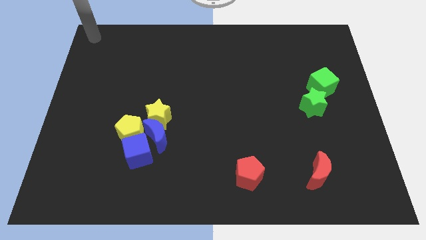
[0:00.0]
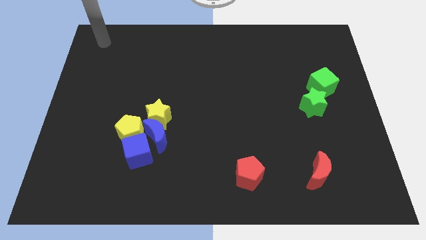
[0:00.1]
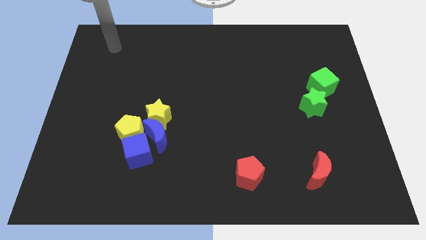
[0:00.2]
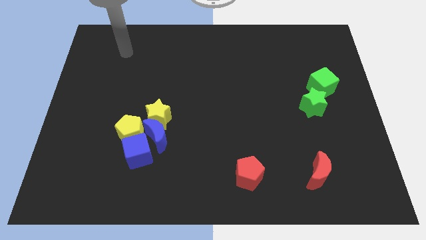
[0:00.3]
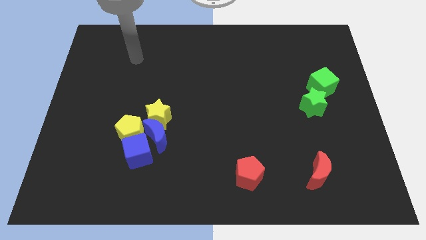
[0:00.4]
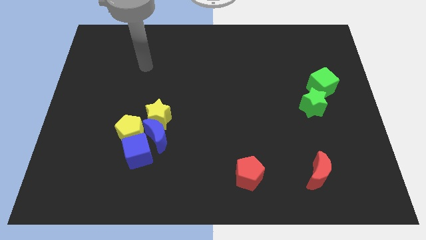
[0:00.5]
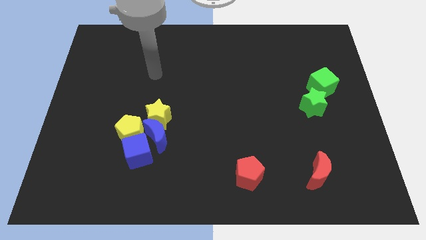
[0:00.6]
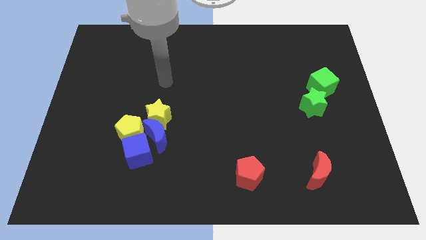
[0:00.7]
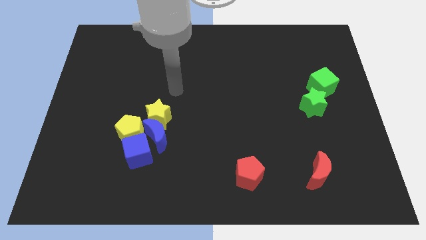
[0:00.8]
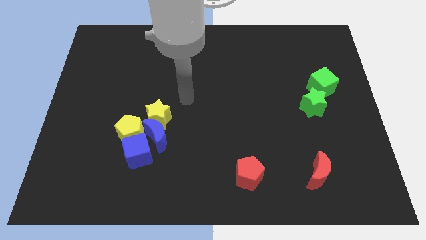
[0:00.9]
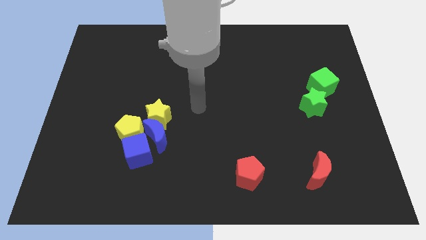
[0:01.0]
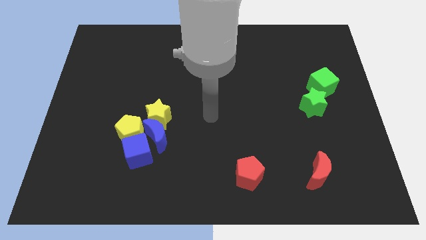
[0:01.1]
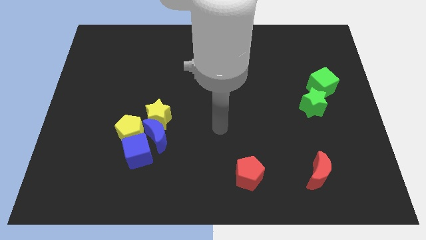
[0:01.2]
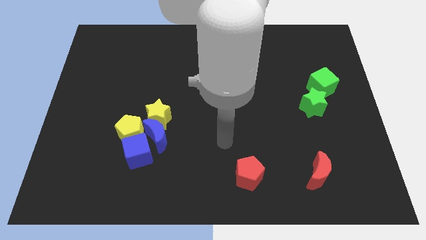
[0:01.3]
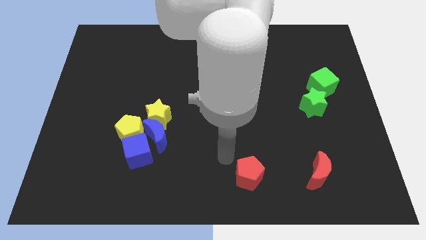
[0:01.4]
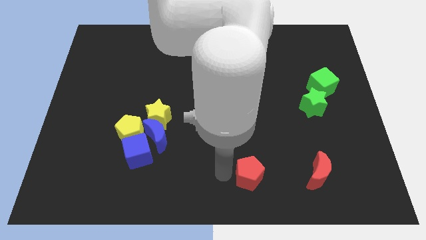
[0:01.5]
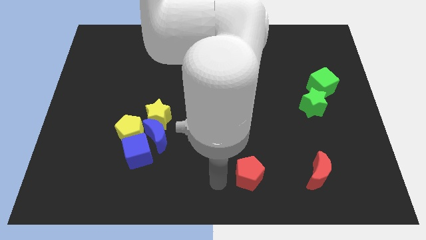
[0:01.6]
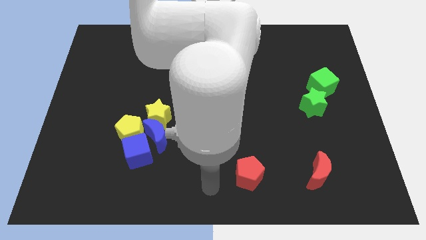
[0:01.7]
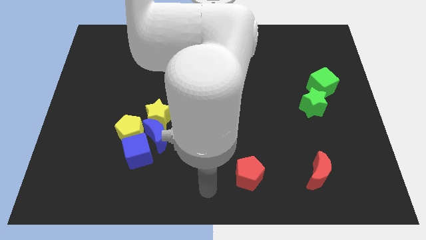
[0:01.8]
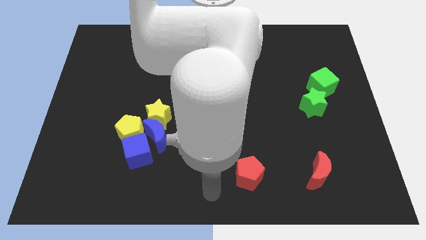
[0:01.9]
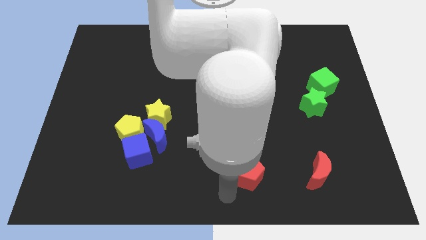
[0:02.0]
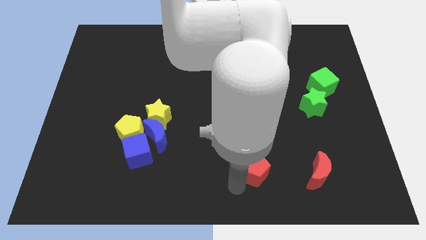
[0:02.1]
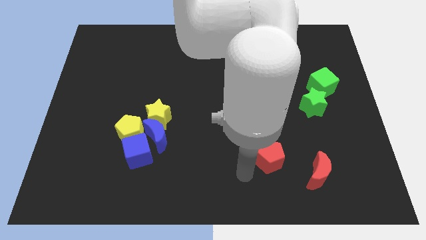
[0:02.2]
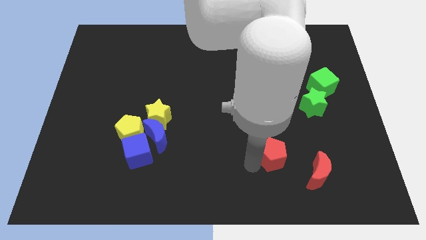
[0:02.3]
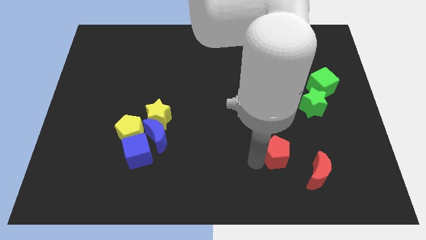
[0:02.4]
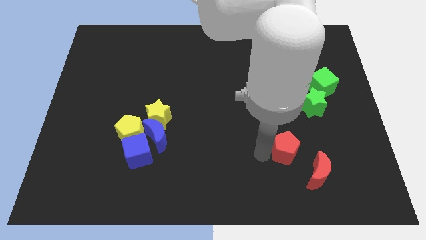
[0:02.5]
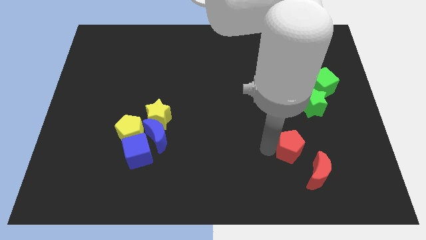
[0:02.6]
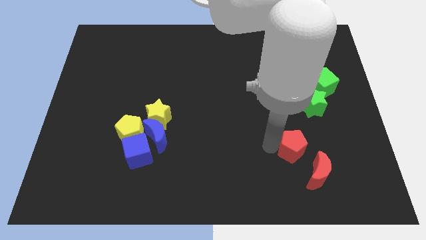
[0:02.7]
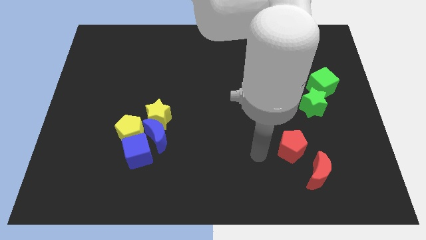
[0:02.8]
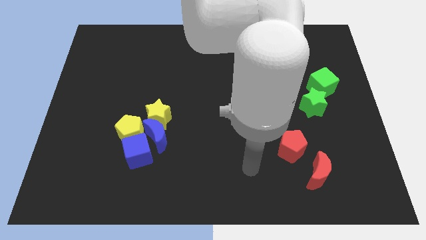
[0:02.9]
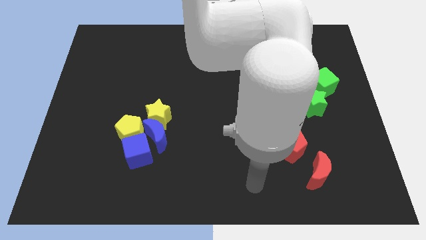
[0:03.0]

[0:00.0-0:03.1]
push the red pentagon to the top left of the red crescent

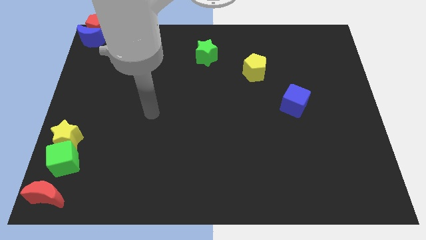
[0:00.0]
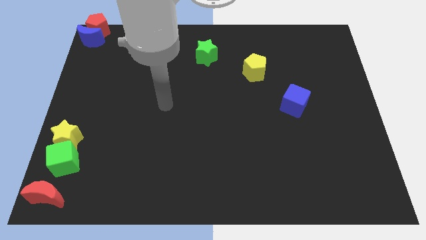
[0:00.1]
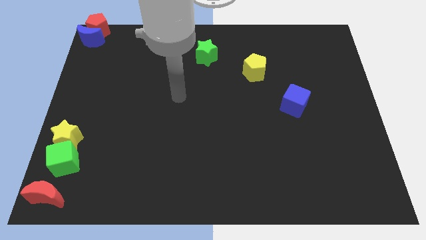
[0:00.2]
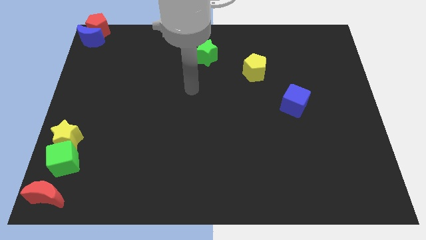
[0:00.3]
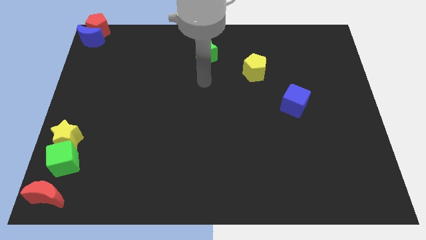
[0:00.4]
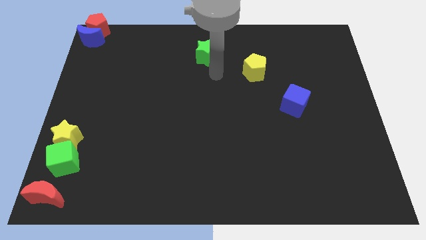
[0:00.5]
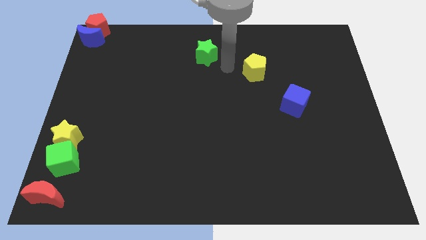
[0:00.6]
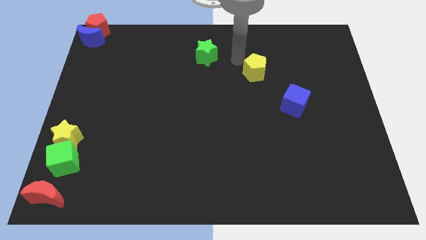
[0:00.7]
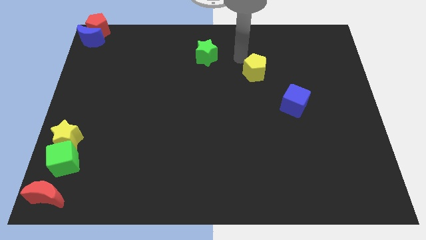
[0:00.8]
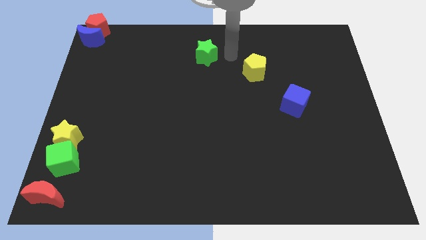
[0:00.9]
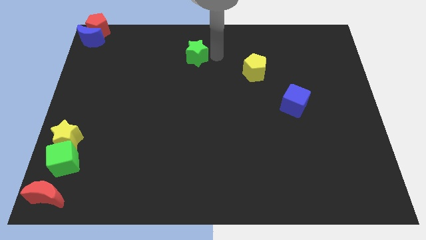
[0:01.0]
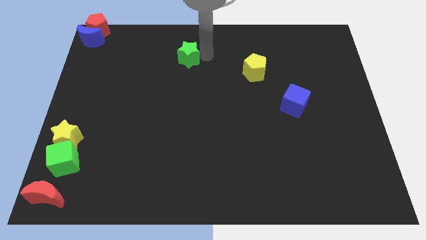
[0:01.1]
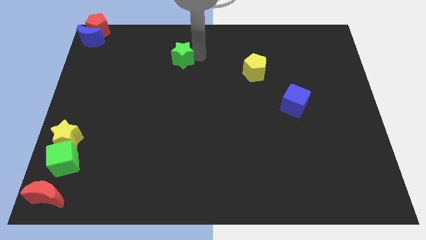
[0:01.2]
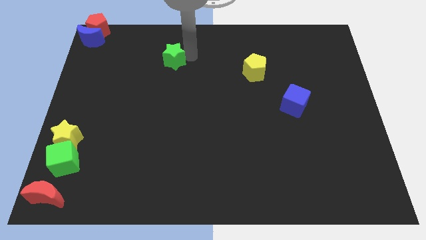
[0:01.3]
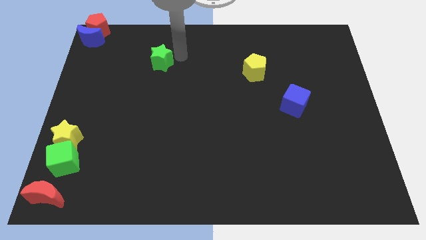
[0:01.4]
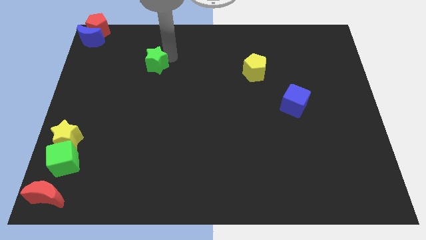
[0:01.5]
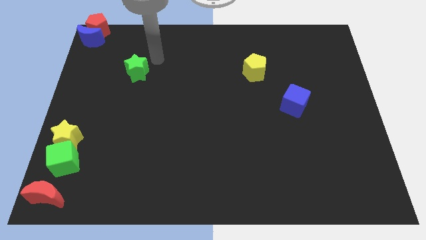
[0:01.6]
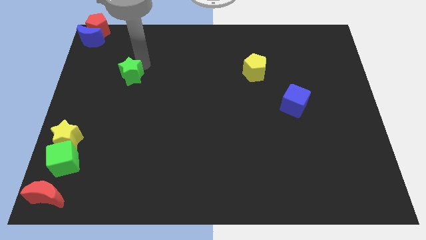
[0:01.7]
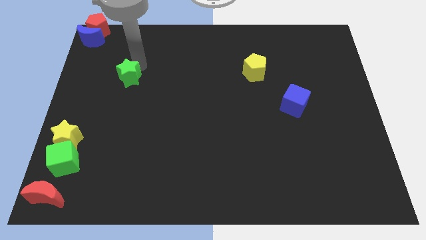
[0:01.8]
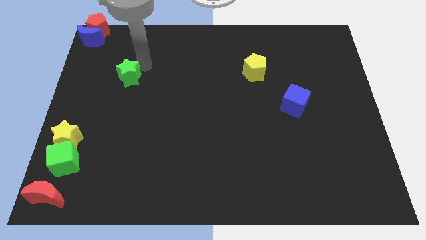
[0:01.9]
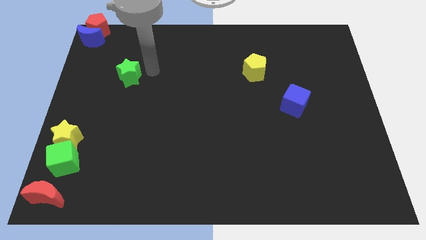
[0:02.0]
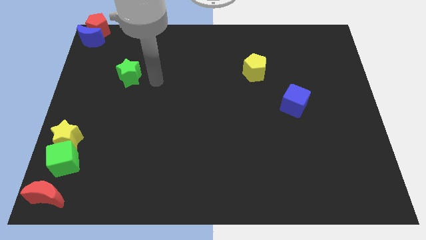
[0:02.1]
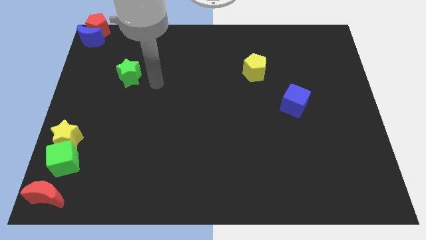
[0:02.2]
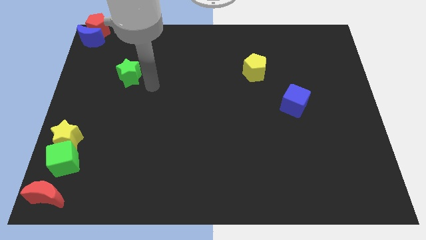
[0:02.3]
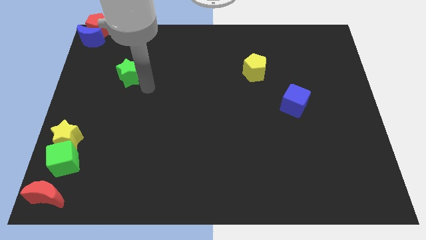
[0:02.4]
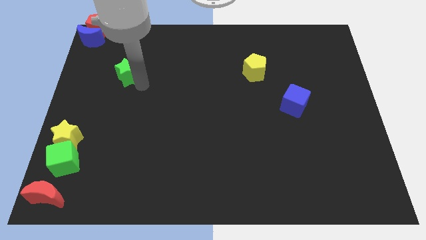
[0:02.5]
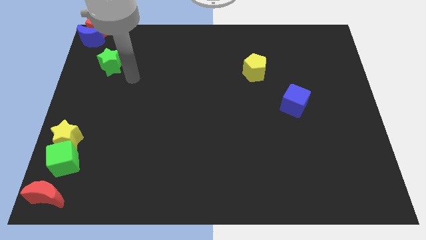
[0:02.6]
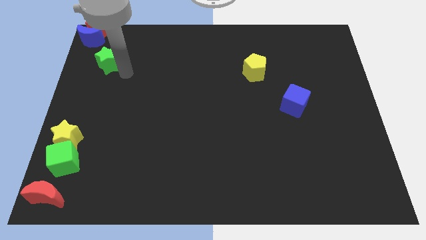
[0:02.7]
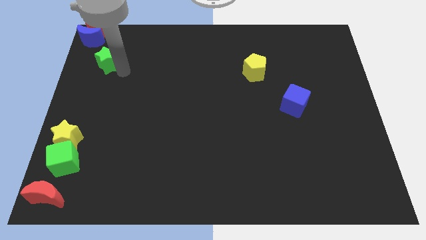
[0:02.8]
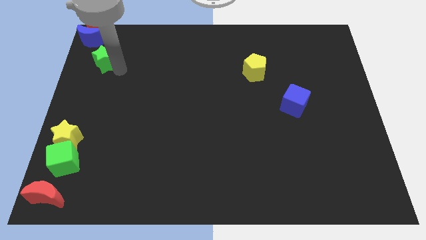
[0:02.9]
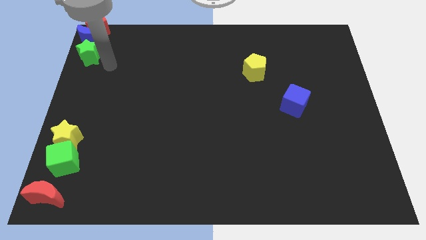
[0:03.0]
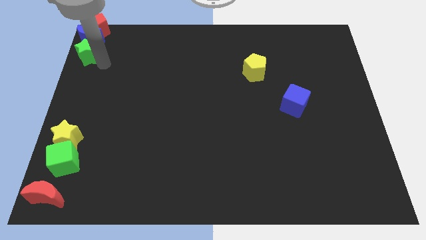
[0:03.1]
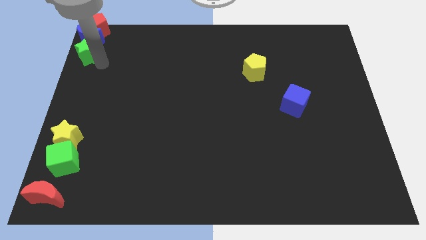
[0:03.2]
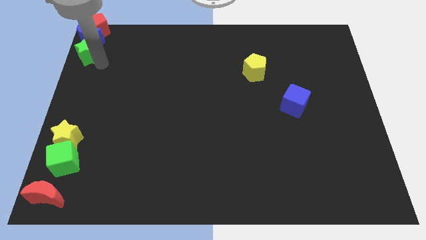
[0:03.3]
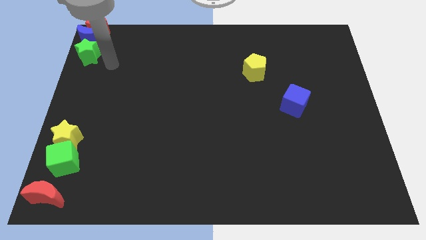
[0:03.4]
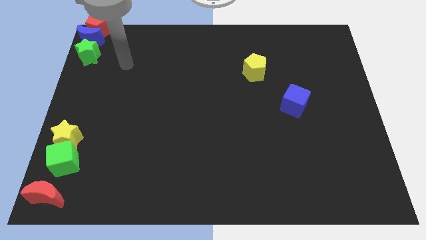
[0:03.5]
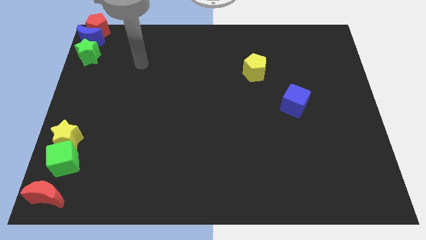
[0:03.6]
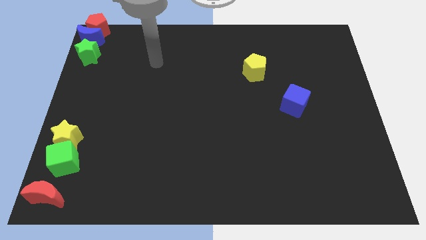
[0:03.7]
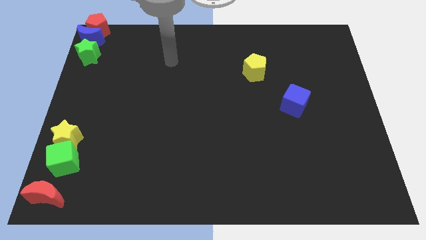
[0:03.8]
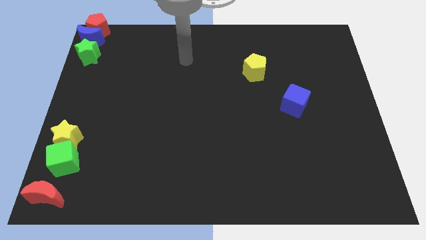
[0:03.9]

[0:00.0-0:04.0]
place the green star below the blue crescent

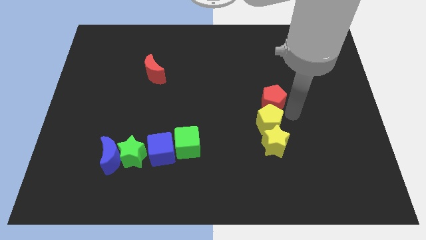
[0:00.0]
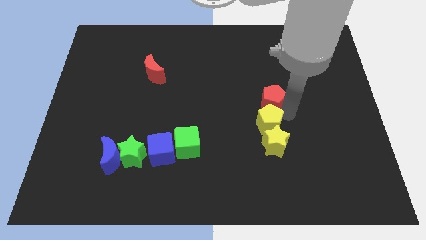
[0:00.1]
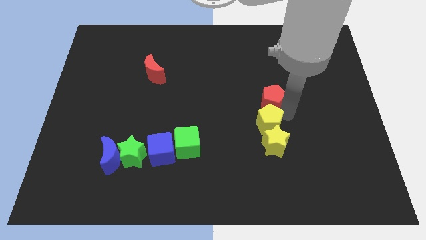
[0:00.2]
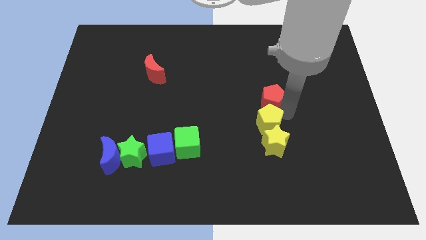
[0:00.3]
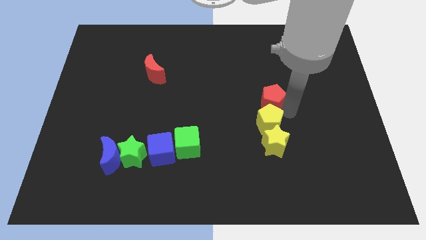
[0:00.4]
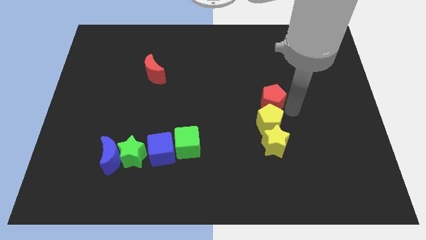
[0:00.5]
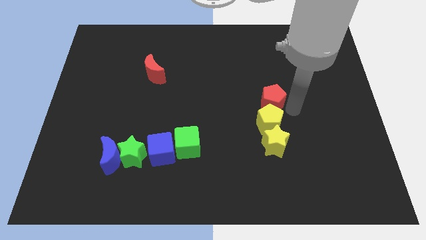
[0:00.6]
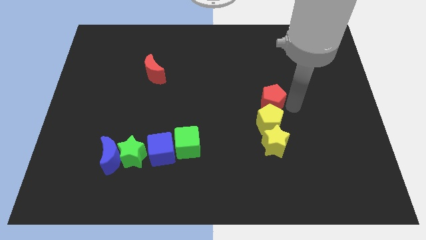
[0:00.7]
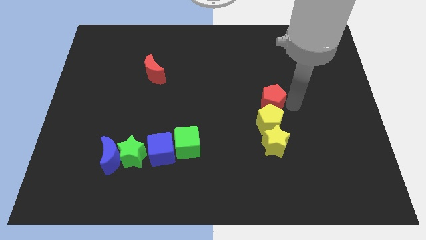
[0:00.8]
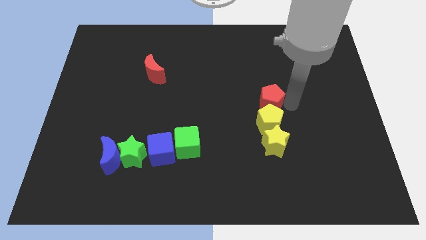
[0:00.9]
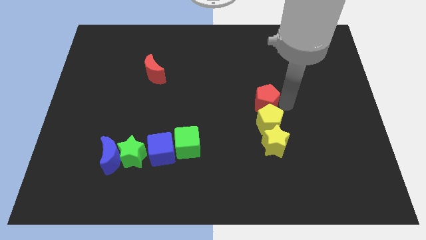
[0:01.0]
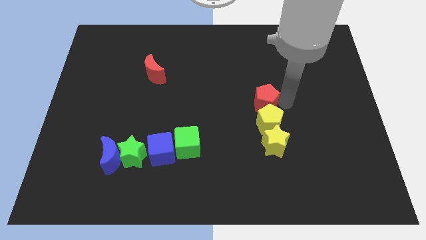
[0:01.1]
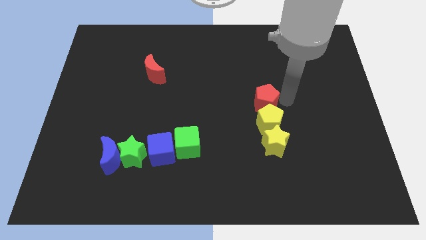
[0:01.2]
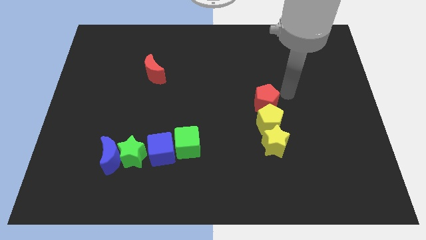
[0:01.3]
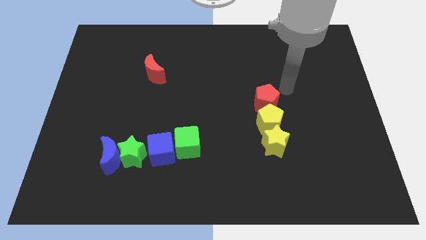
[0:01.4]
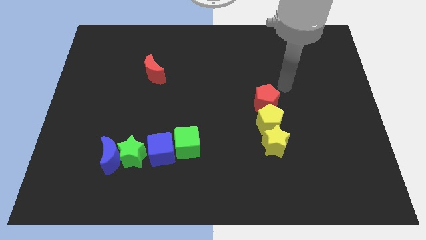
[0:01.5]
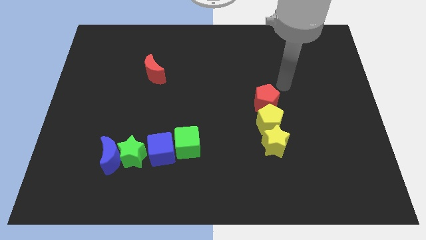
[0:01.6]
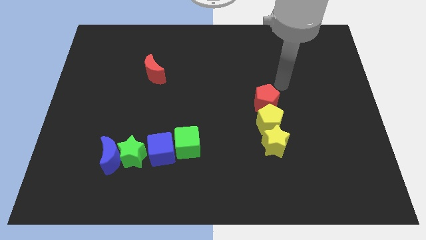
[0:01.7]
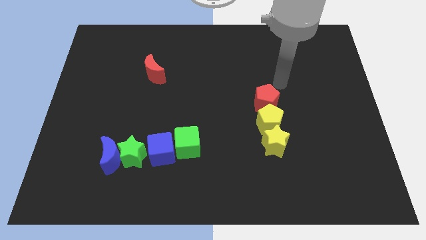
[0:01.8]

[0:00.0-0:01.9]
move the red pentagon to the top of the yellow pentagon

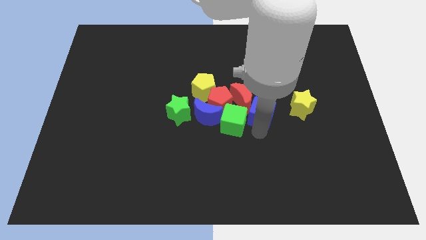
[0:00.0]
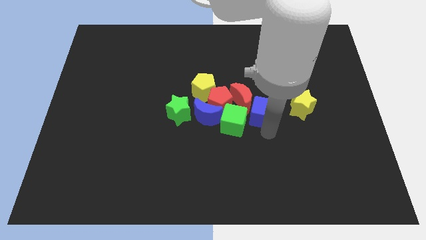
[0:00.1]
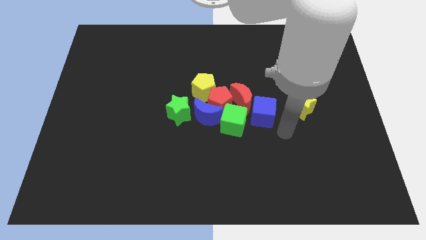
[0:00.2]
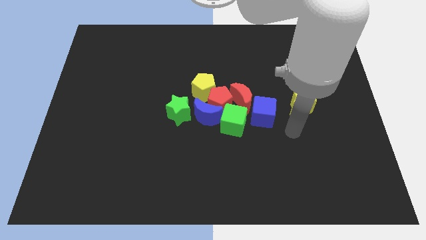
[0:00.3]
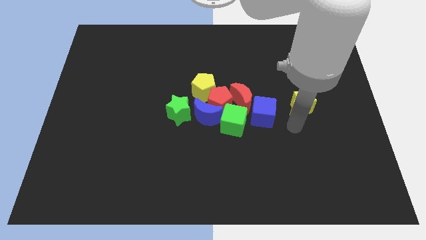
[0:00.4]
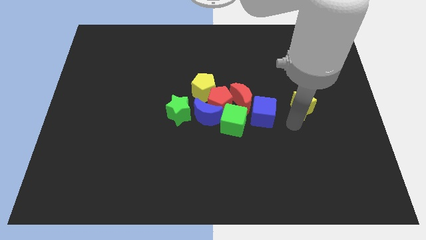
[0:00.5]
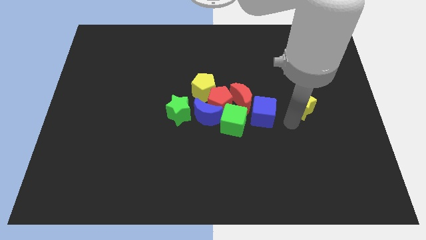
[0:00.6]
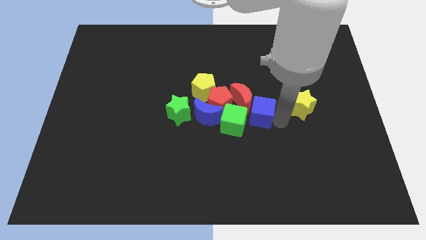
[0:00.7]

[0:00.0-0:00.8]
move the arm right to the blue cube
